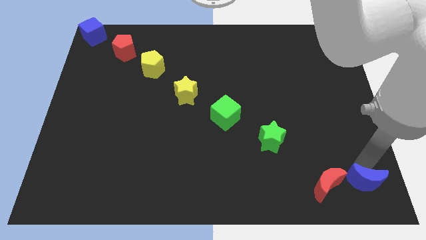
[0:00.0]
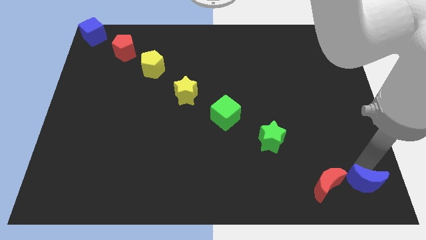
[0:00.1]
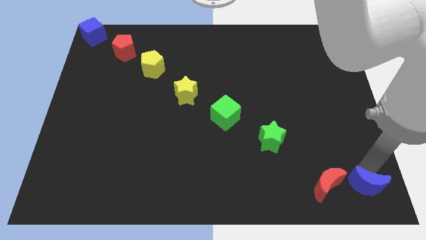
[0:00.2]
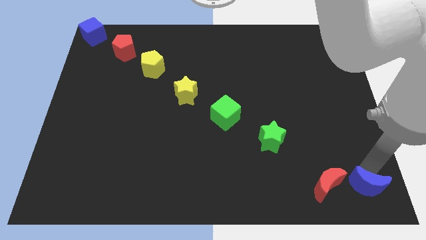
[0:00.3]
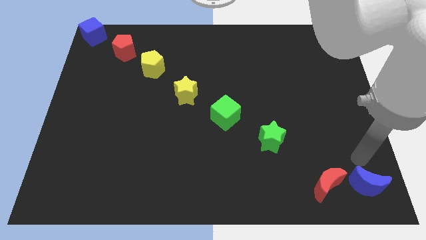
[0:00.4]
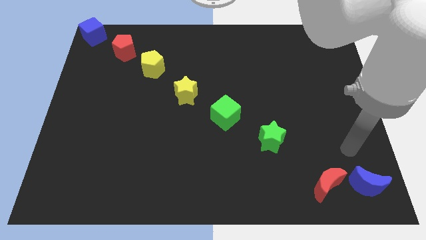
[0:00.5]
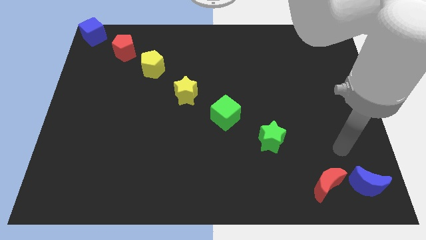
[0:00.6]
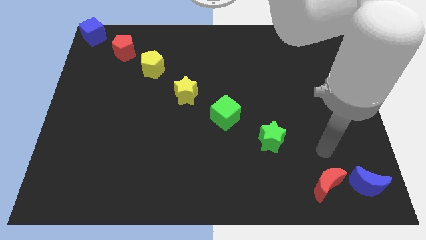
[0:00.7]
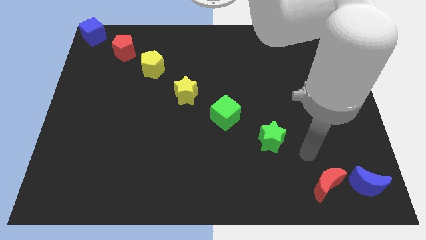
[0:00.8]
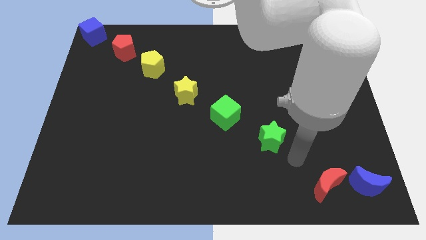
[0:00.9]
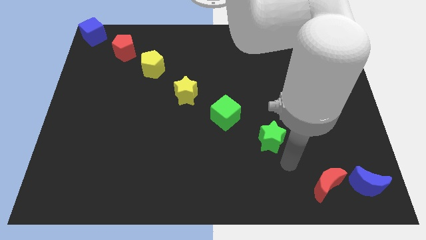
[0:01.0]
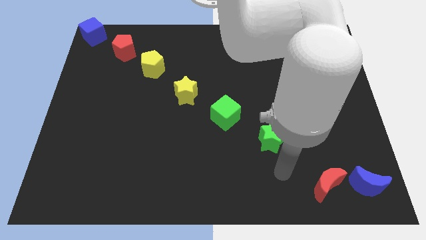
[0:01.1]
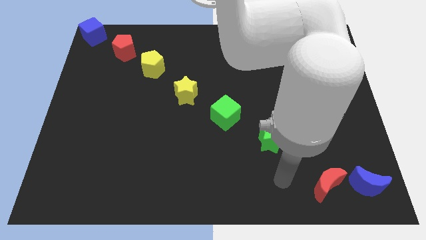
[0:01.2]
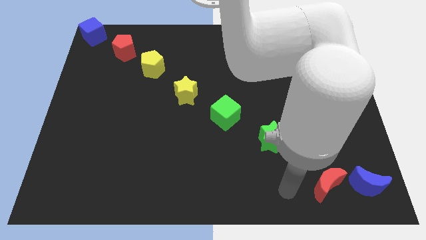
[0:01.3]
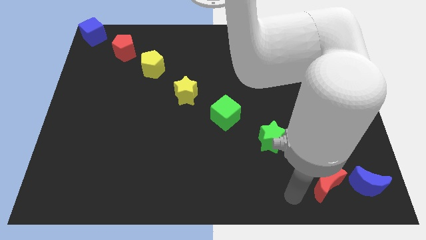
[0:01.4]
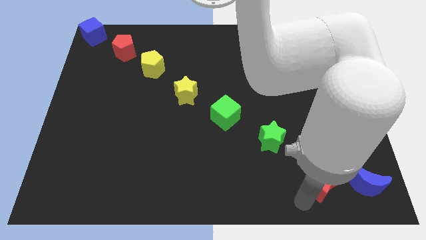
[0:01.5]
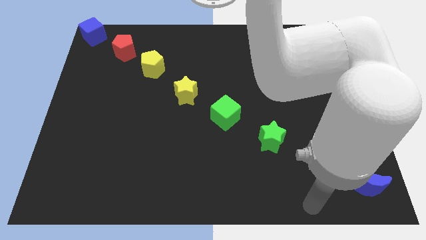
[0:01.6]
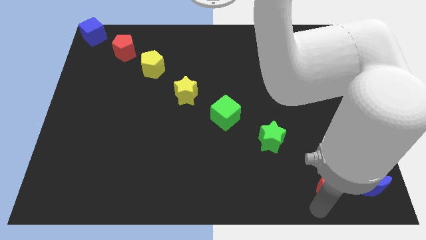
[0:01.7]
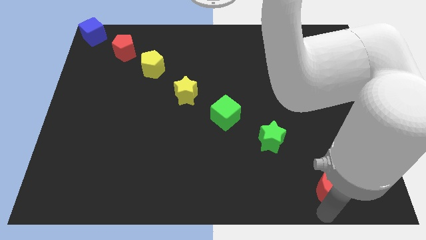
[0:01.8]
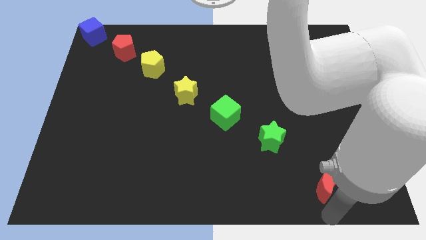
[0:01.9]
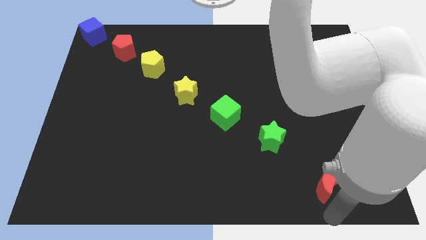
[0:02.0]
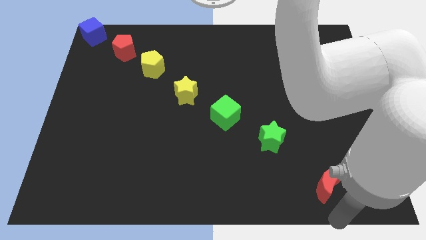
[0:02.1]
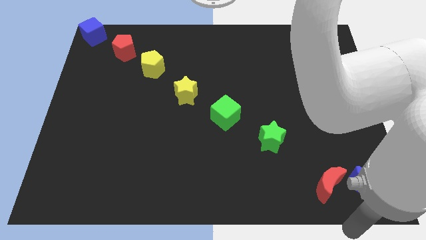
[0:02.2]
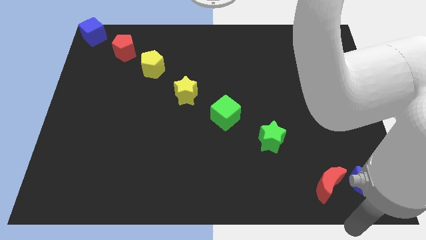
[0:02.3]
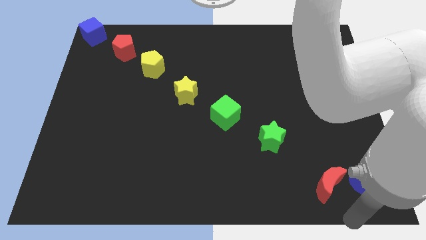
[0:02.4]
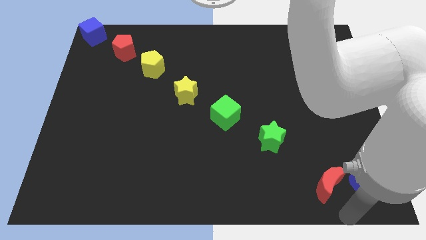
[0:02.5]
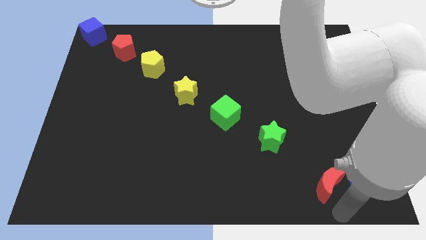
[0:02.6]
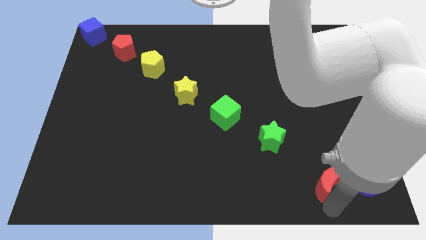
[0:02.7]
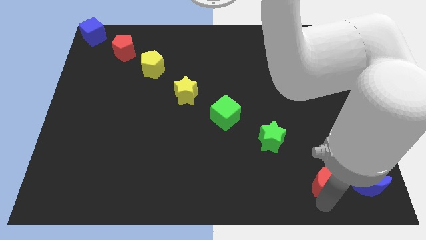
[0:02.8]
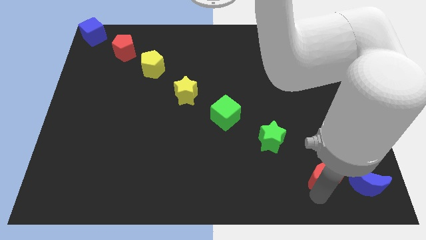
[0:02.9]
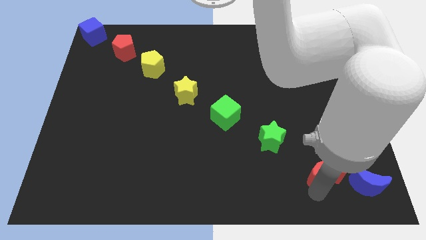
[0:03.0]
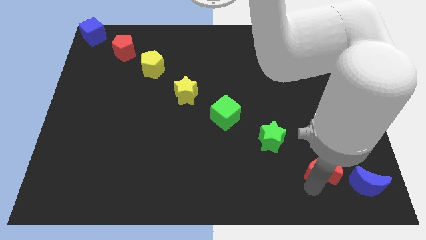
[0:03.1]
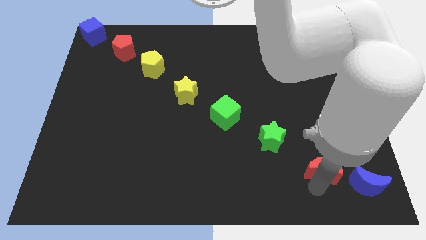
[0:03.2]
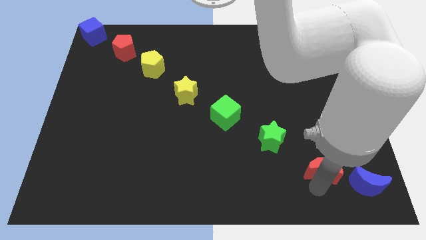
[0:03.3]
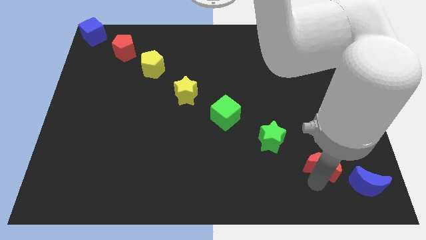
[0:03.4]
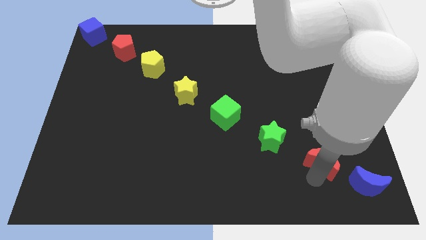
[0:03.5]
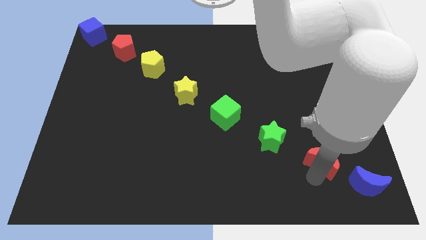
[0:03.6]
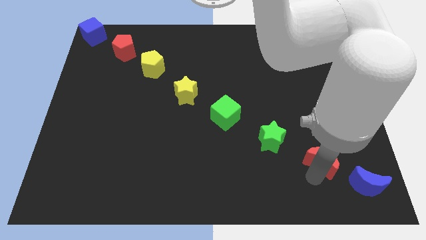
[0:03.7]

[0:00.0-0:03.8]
place the red moon in between green star and blue moon

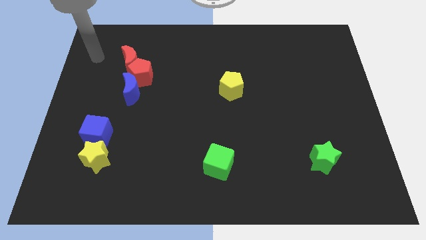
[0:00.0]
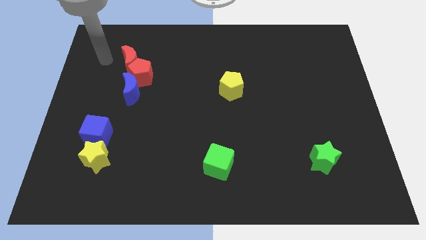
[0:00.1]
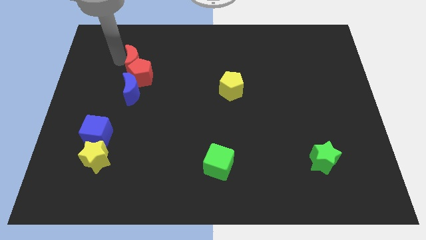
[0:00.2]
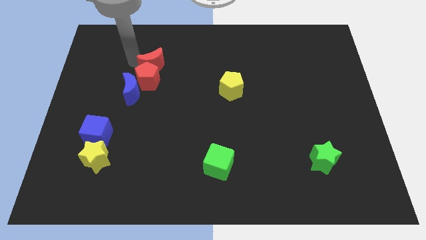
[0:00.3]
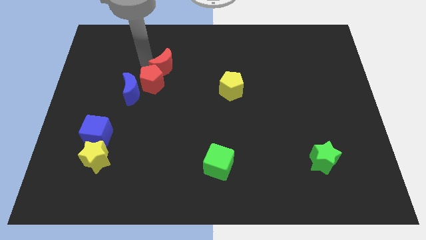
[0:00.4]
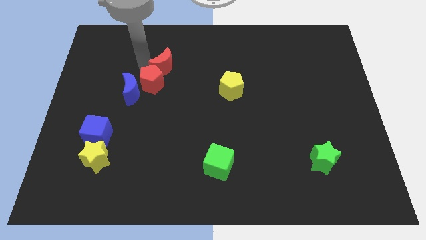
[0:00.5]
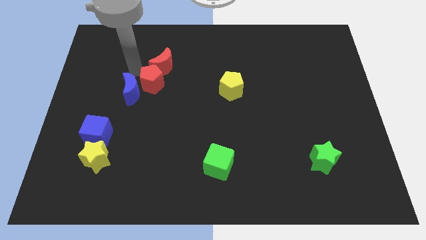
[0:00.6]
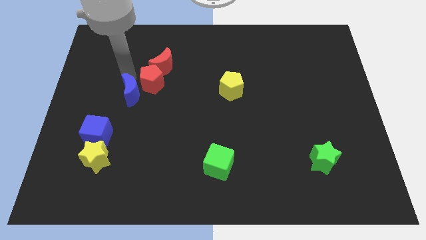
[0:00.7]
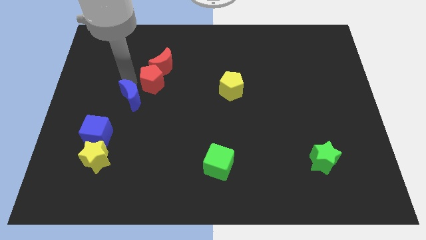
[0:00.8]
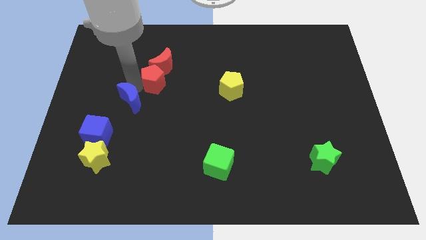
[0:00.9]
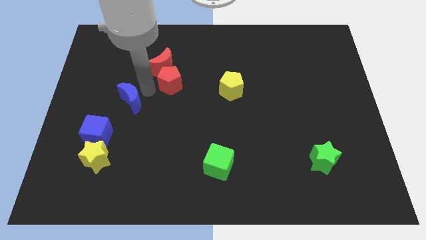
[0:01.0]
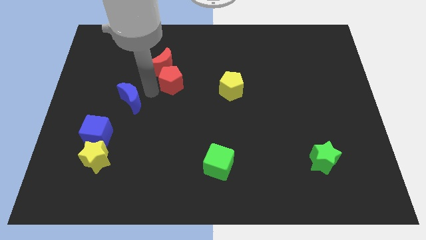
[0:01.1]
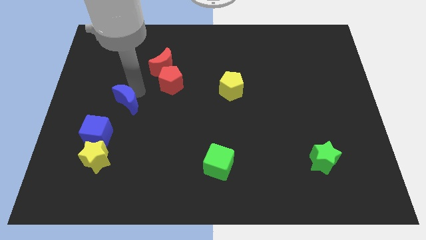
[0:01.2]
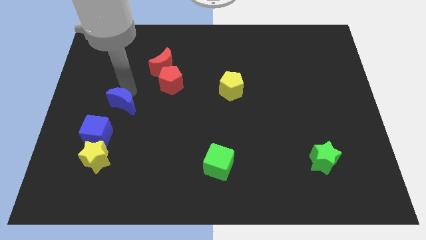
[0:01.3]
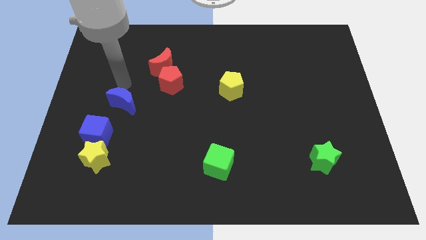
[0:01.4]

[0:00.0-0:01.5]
push the red crescent and the red pentagon towards right

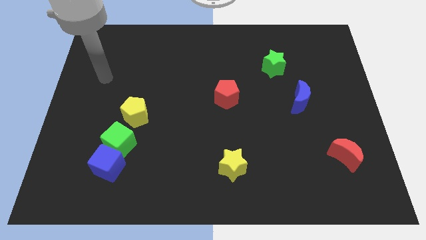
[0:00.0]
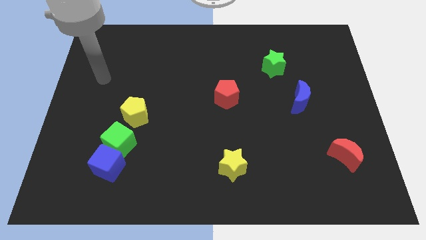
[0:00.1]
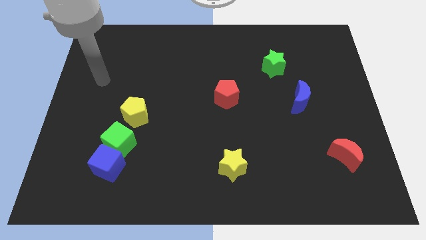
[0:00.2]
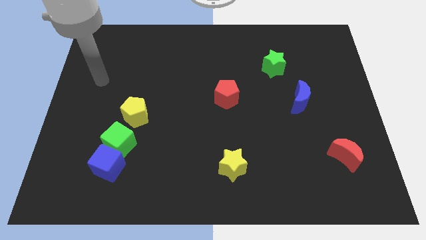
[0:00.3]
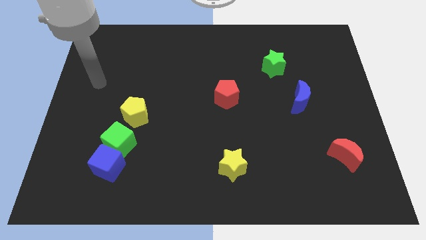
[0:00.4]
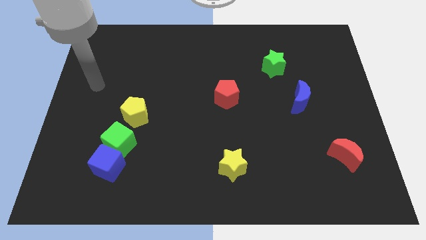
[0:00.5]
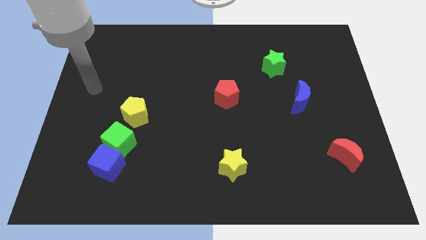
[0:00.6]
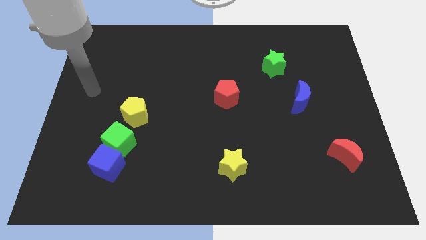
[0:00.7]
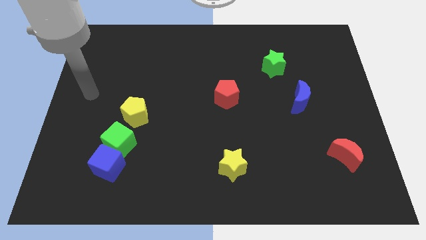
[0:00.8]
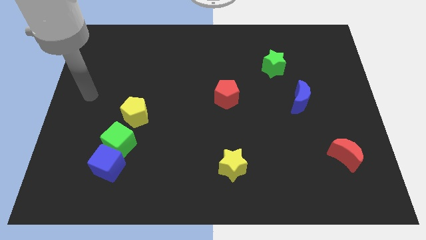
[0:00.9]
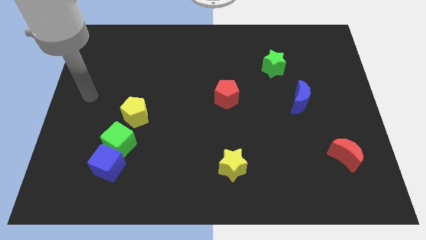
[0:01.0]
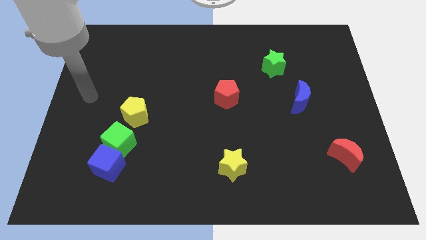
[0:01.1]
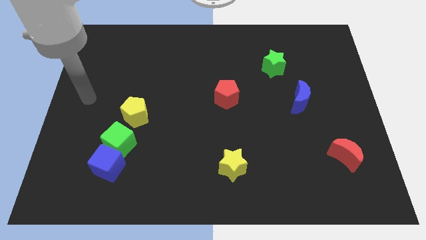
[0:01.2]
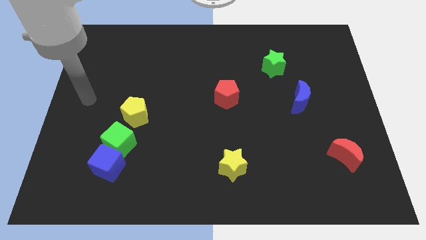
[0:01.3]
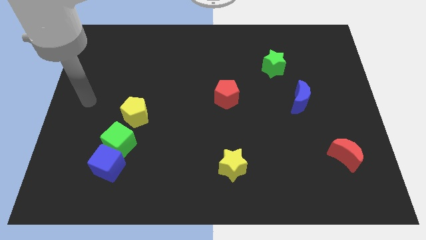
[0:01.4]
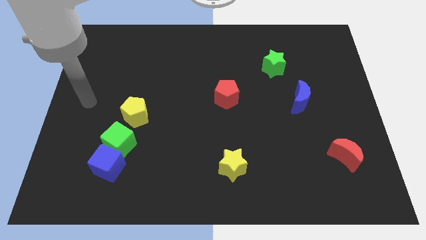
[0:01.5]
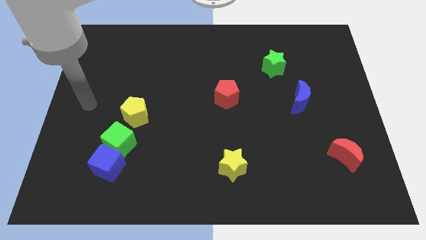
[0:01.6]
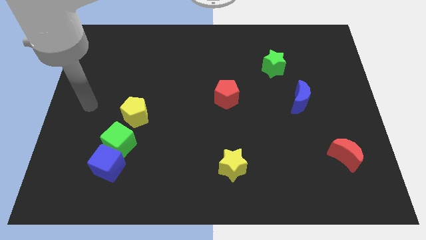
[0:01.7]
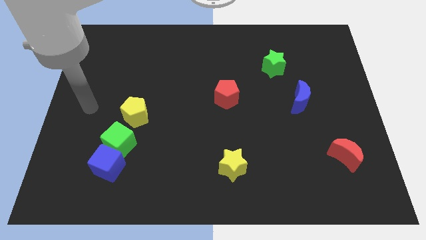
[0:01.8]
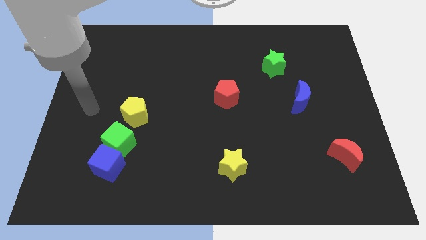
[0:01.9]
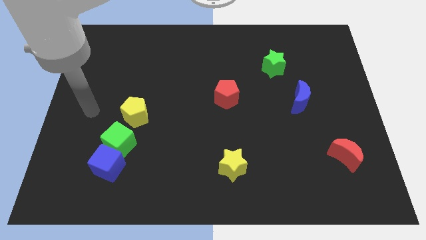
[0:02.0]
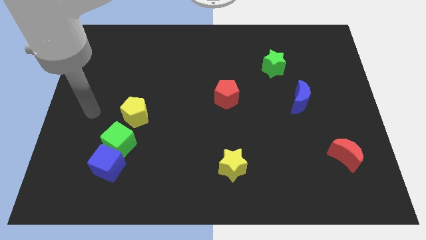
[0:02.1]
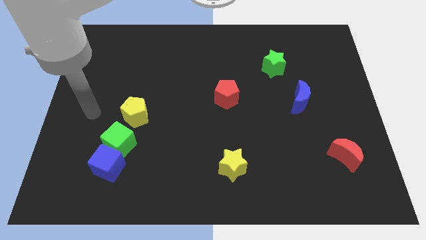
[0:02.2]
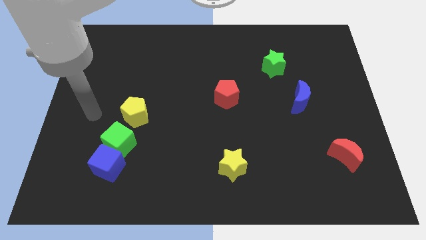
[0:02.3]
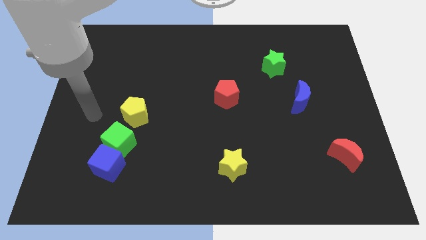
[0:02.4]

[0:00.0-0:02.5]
move your arm towards the left of yellow pentagon

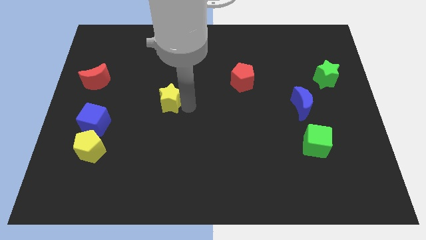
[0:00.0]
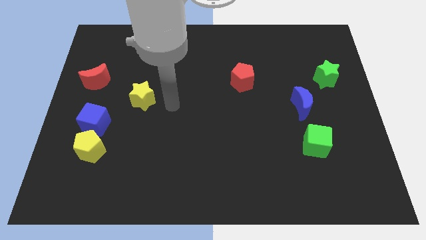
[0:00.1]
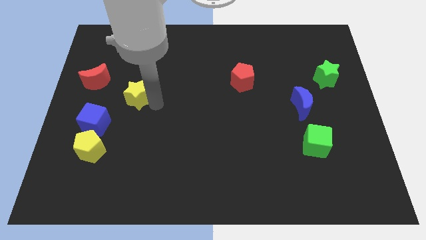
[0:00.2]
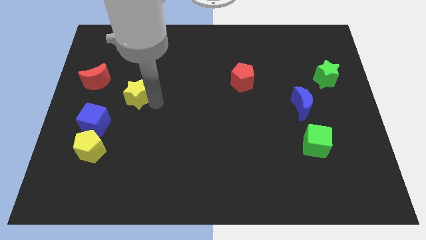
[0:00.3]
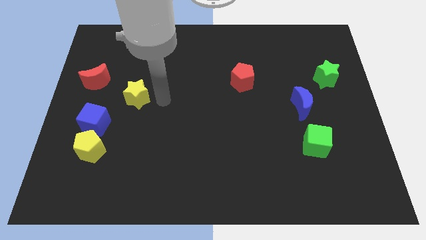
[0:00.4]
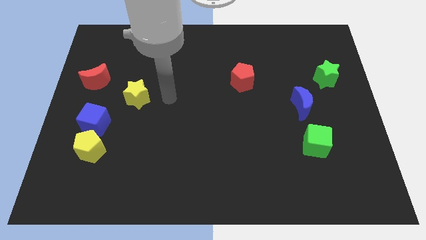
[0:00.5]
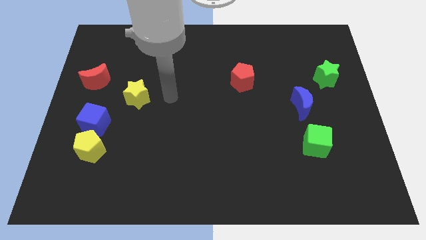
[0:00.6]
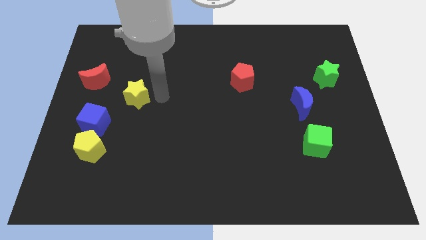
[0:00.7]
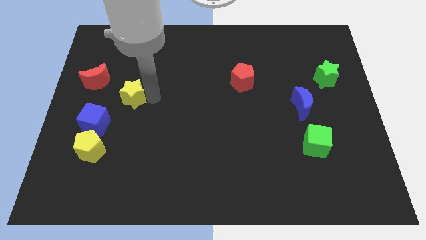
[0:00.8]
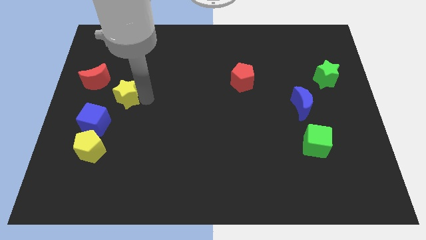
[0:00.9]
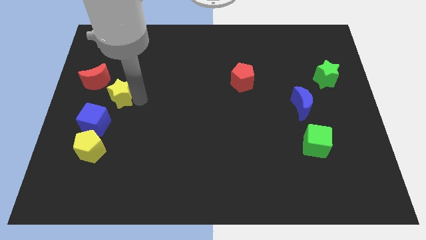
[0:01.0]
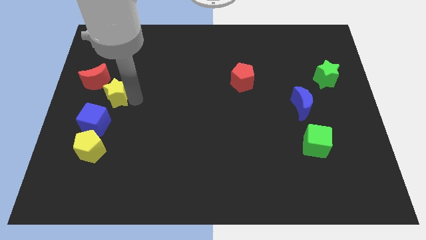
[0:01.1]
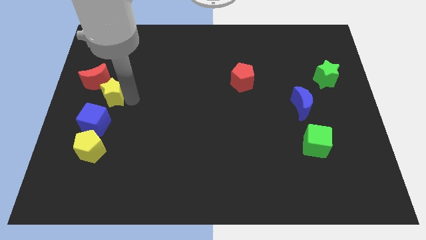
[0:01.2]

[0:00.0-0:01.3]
push the yellow star to the left of the board
